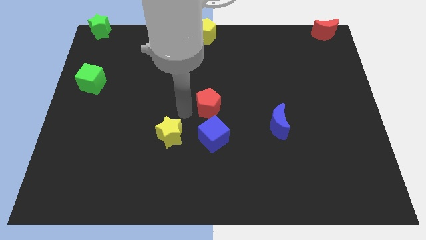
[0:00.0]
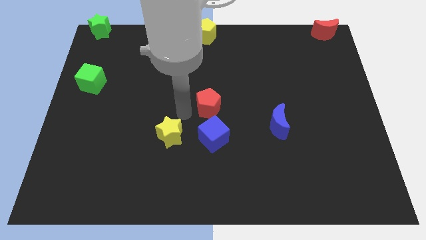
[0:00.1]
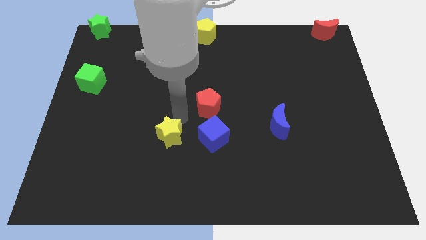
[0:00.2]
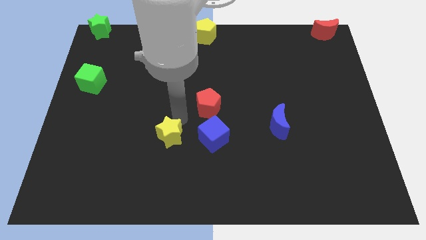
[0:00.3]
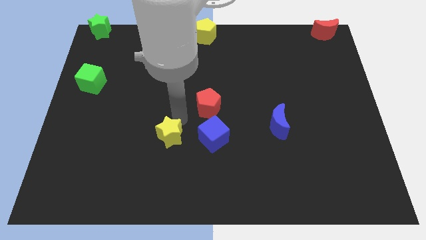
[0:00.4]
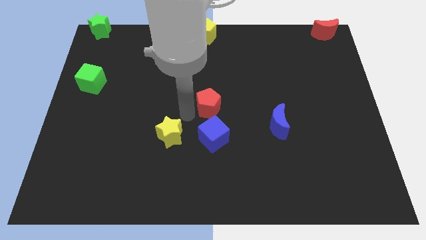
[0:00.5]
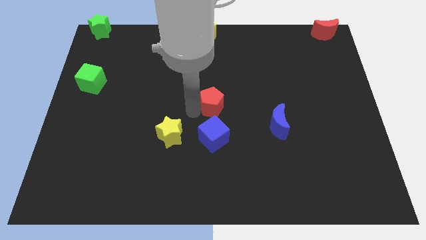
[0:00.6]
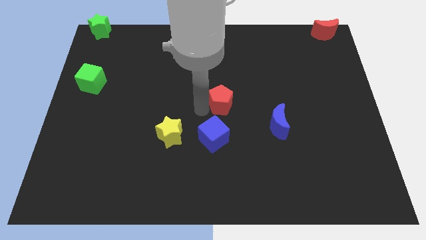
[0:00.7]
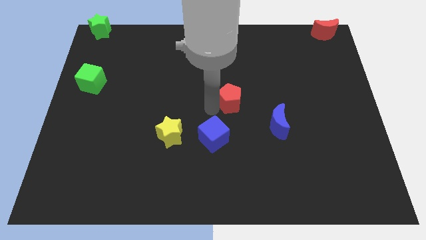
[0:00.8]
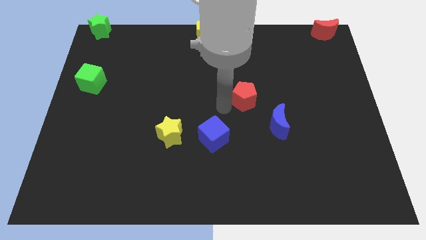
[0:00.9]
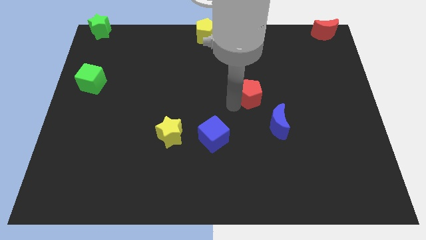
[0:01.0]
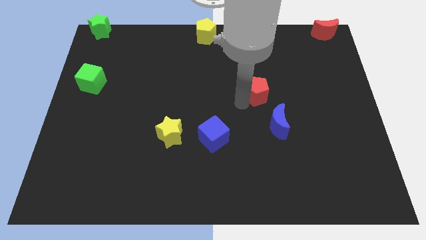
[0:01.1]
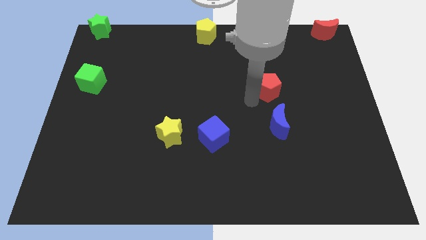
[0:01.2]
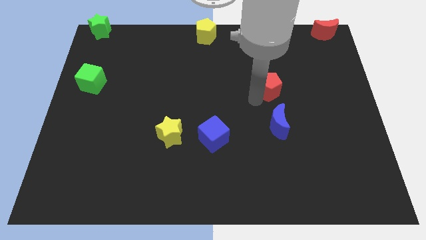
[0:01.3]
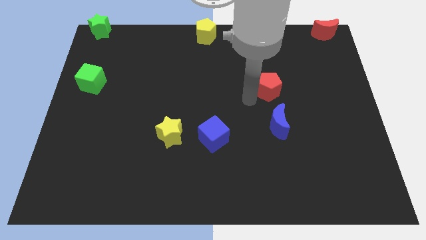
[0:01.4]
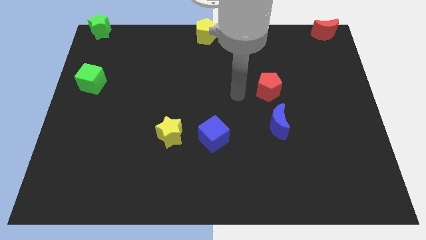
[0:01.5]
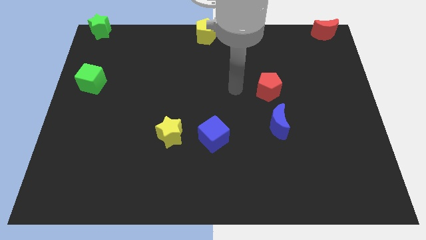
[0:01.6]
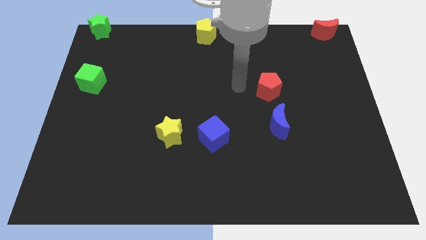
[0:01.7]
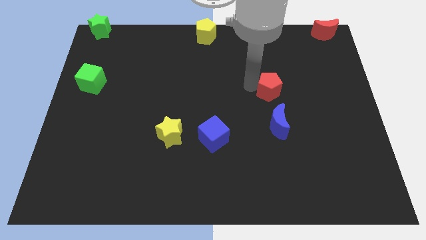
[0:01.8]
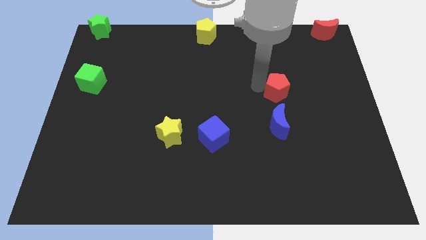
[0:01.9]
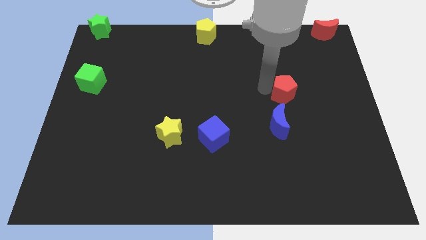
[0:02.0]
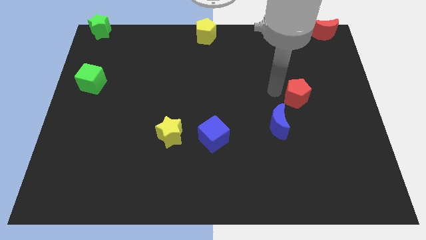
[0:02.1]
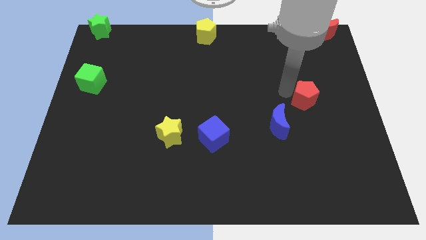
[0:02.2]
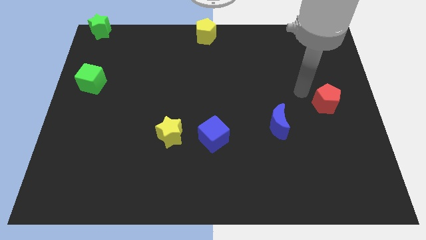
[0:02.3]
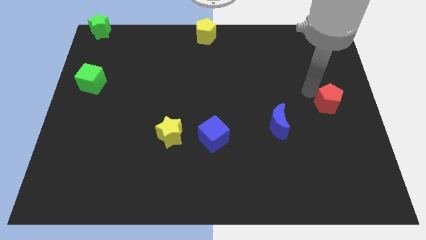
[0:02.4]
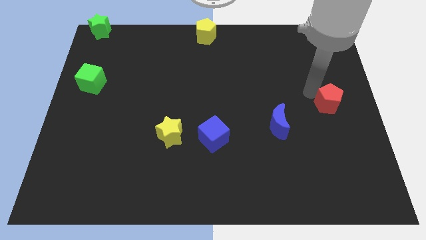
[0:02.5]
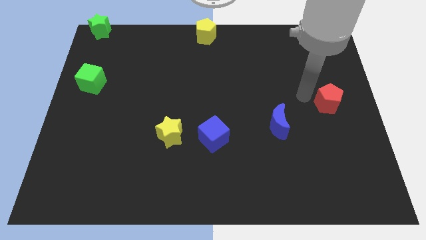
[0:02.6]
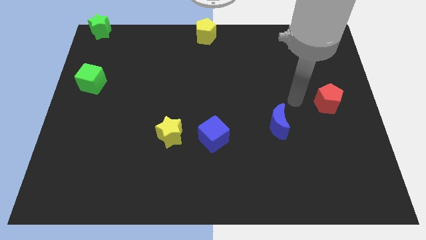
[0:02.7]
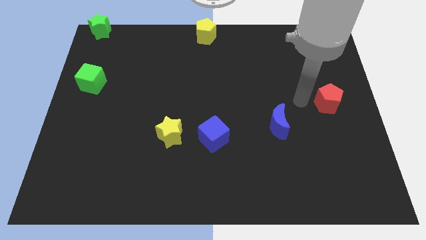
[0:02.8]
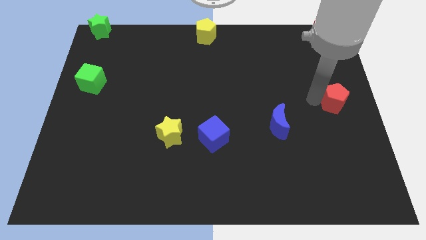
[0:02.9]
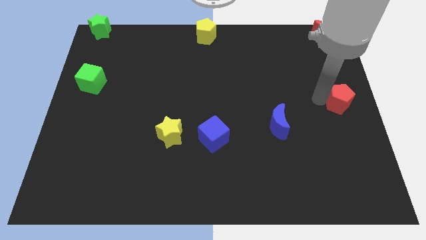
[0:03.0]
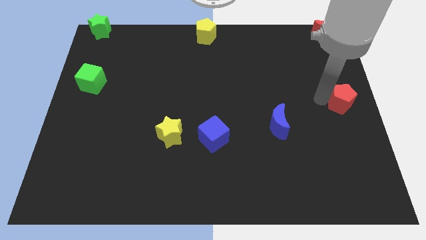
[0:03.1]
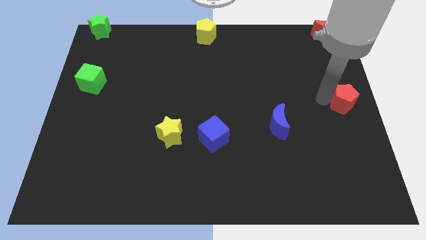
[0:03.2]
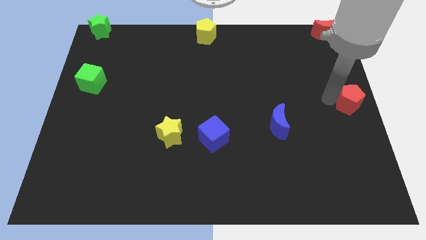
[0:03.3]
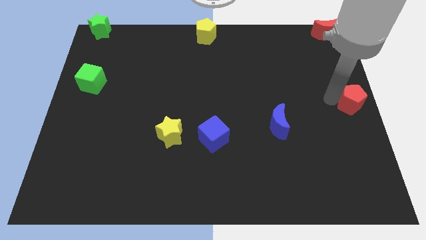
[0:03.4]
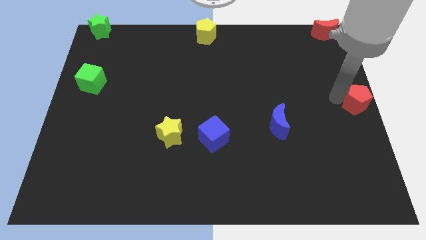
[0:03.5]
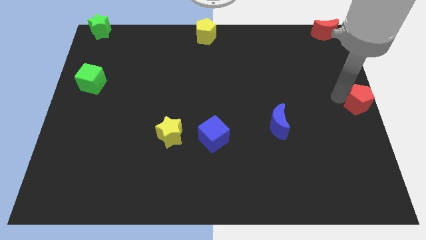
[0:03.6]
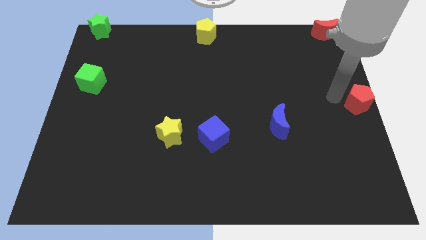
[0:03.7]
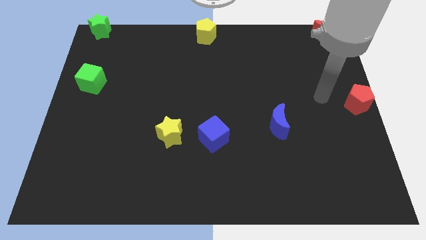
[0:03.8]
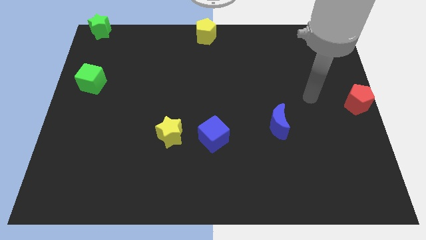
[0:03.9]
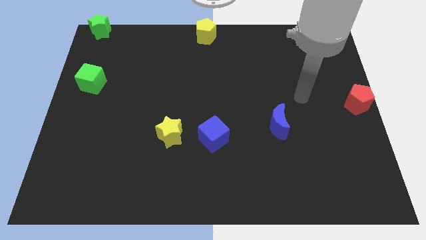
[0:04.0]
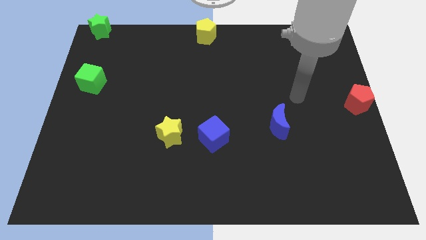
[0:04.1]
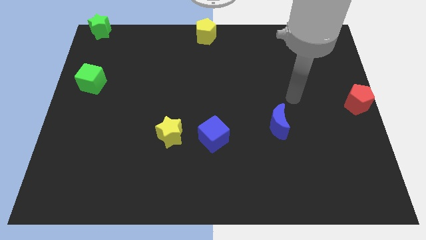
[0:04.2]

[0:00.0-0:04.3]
move the red pentagon far from the blue block

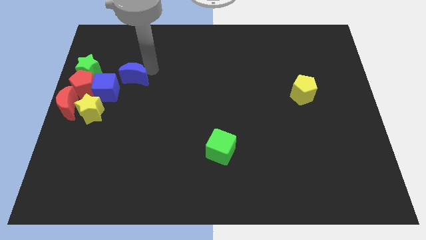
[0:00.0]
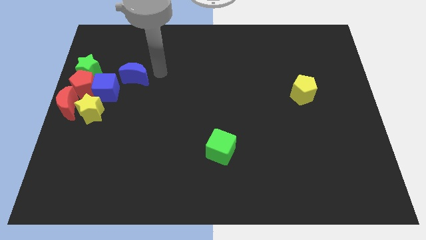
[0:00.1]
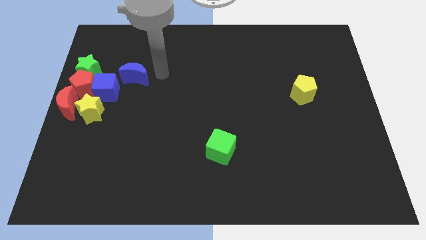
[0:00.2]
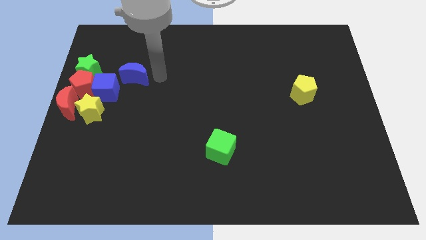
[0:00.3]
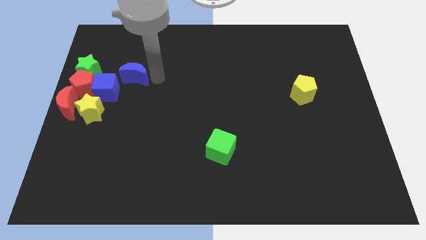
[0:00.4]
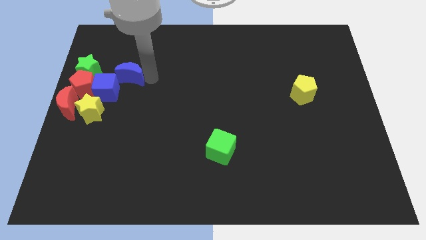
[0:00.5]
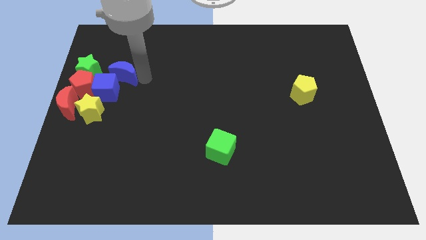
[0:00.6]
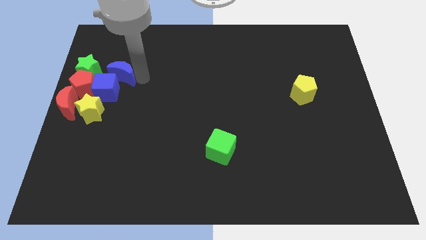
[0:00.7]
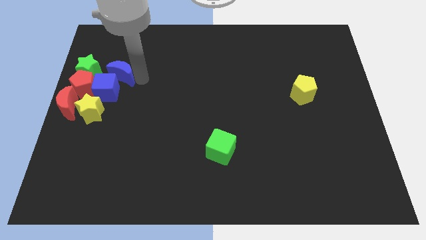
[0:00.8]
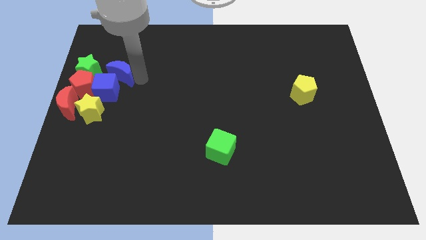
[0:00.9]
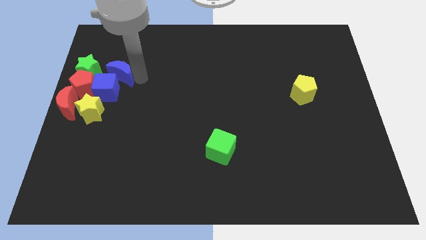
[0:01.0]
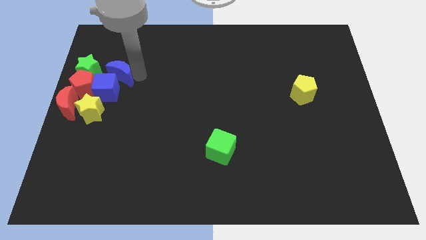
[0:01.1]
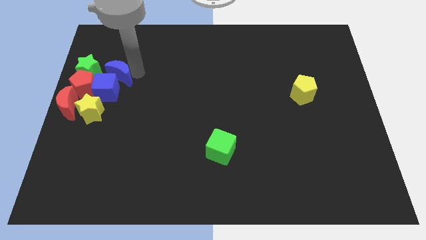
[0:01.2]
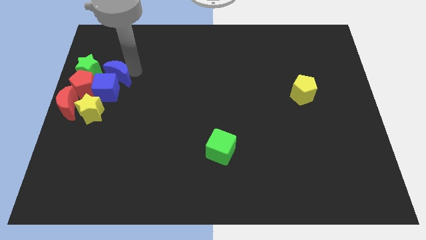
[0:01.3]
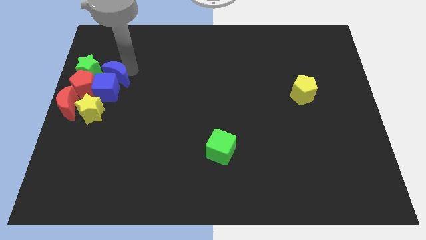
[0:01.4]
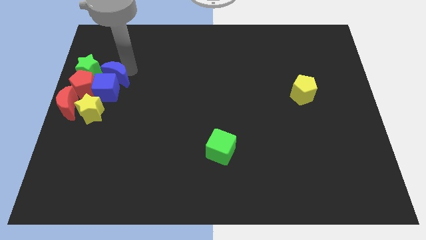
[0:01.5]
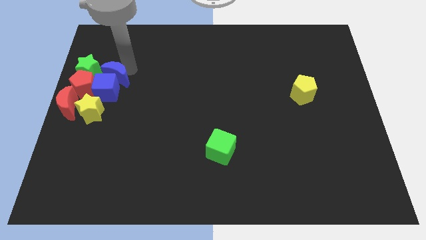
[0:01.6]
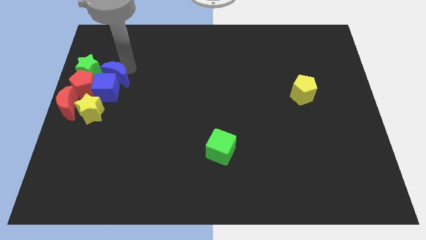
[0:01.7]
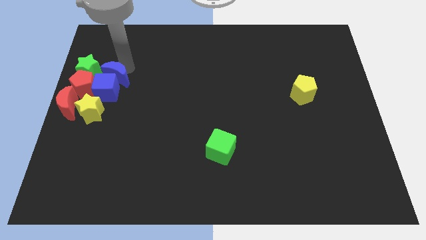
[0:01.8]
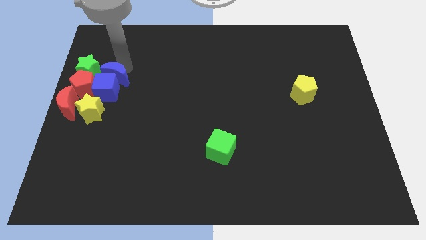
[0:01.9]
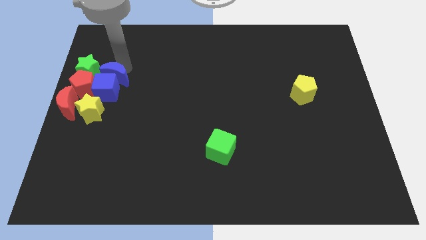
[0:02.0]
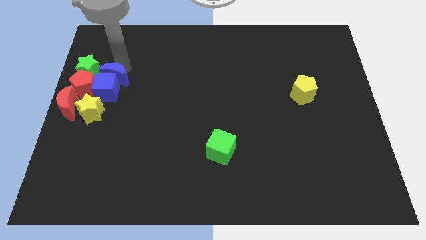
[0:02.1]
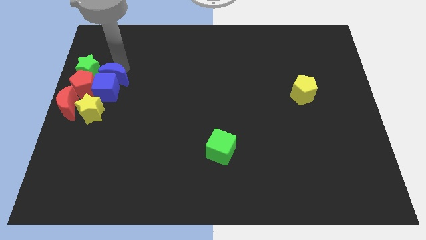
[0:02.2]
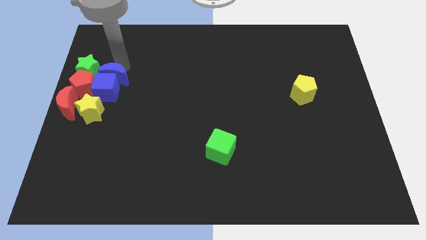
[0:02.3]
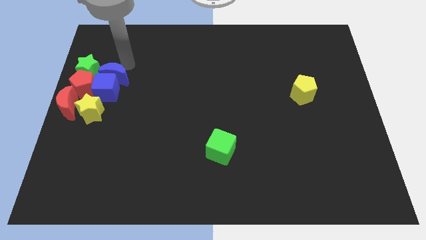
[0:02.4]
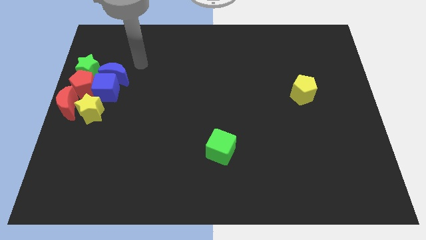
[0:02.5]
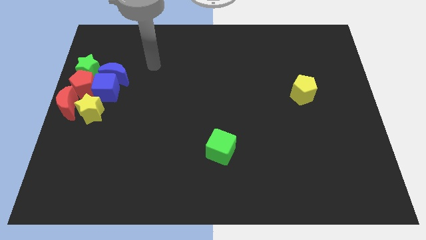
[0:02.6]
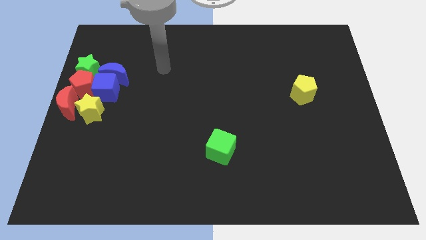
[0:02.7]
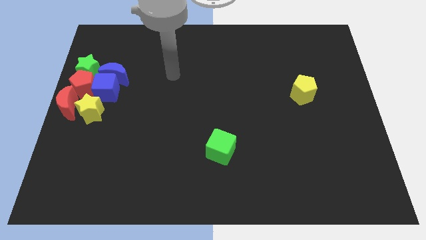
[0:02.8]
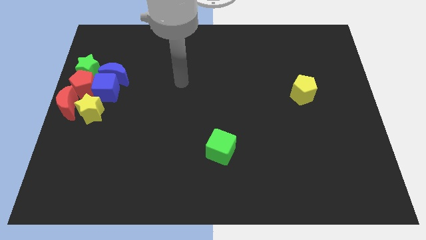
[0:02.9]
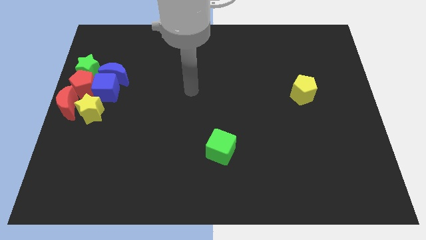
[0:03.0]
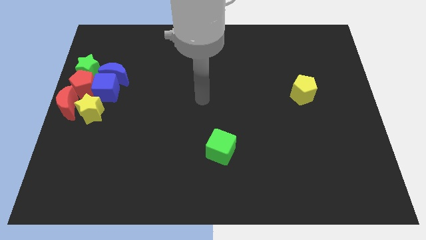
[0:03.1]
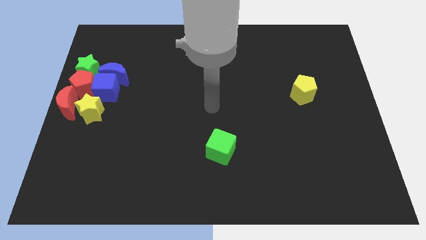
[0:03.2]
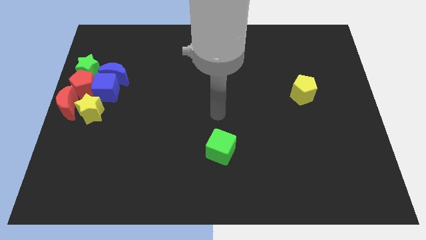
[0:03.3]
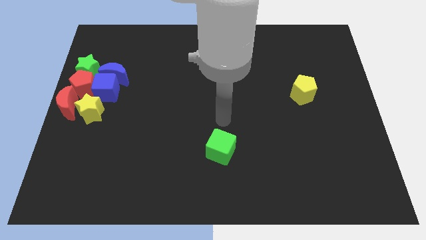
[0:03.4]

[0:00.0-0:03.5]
push the blue crescent at the top of the blue cube

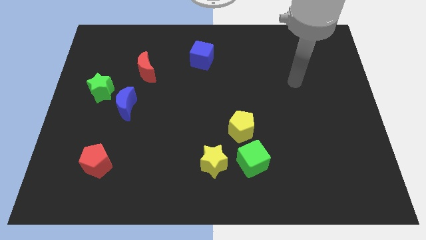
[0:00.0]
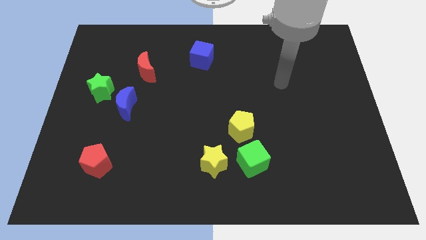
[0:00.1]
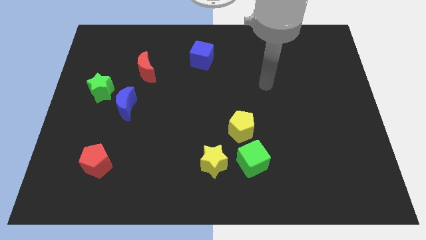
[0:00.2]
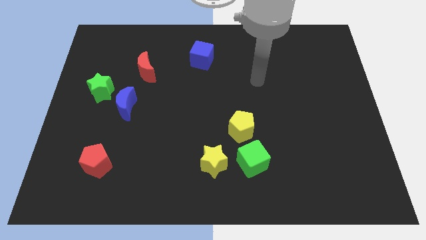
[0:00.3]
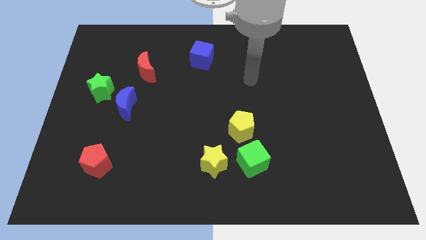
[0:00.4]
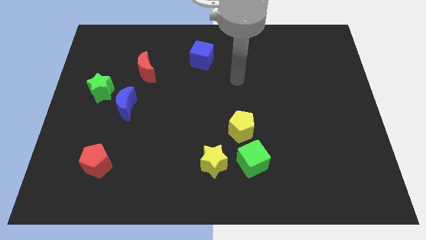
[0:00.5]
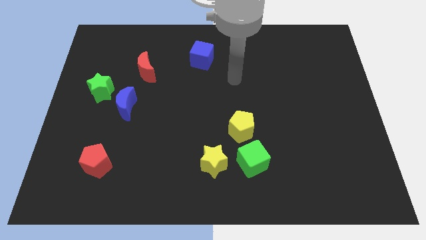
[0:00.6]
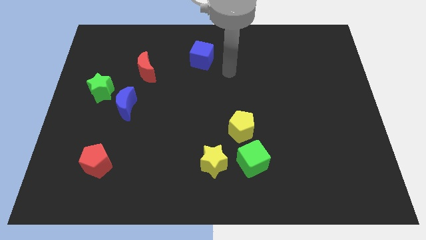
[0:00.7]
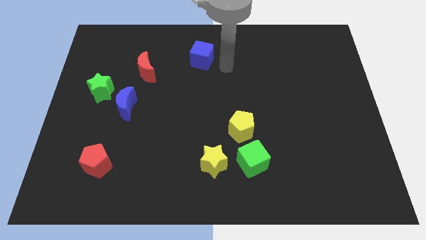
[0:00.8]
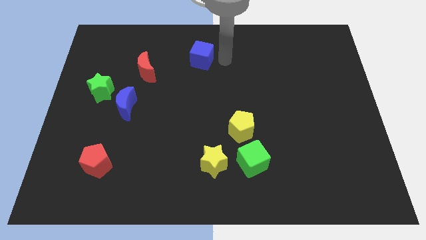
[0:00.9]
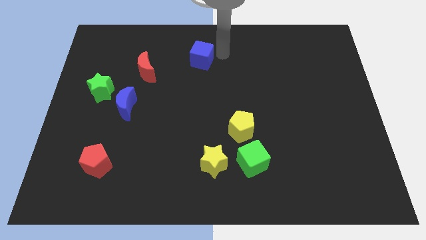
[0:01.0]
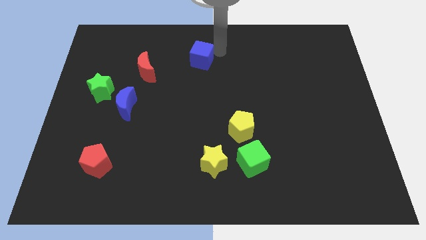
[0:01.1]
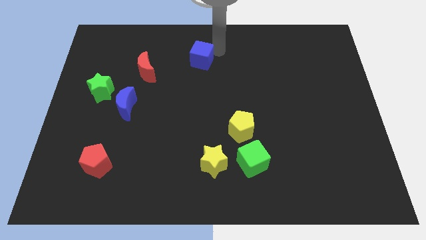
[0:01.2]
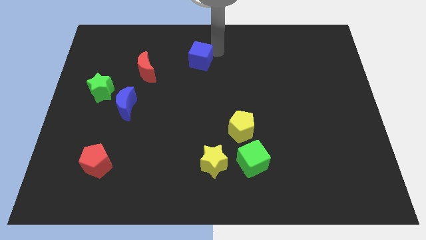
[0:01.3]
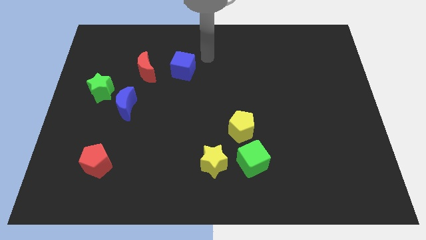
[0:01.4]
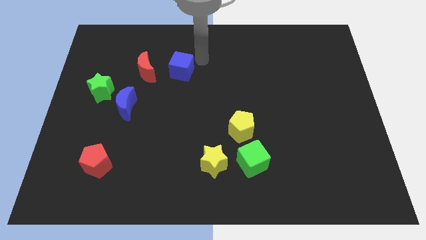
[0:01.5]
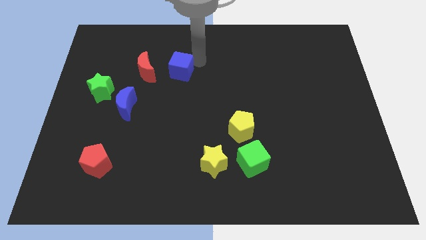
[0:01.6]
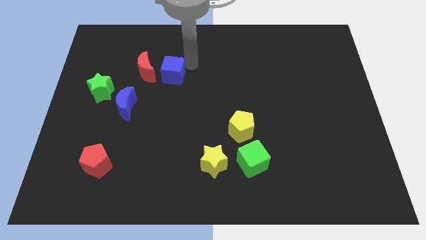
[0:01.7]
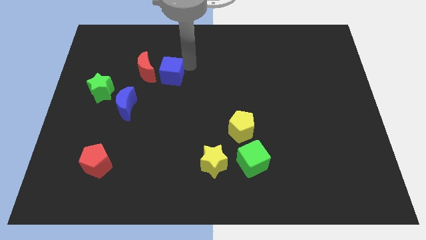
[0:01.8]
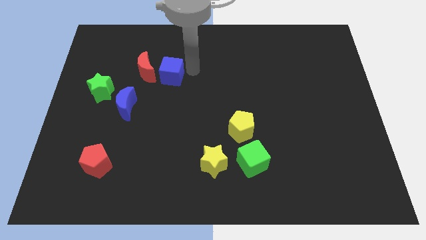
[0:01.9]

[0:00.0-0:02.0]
push the blue cube to the right of the red crescent
